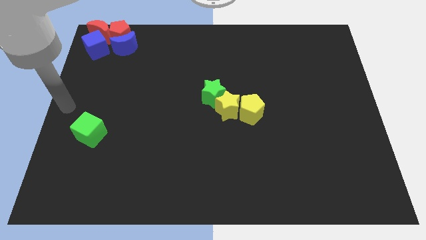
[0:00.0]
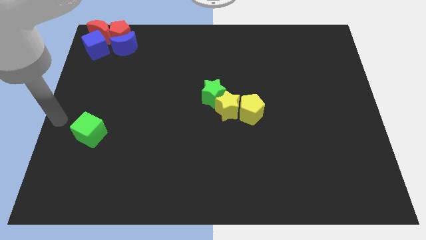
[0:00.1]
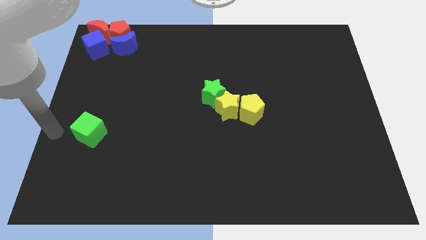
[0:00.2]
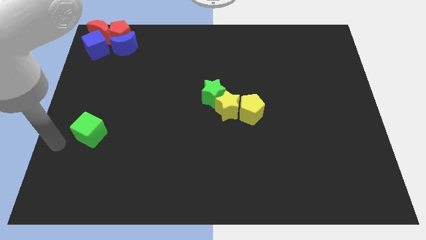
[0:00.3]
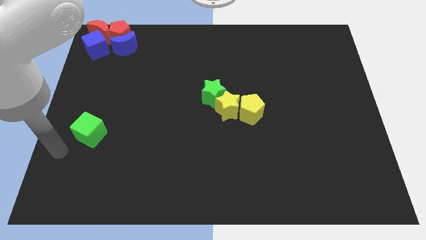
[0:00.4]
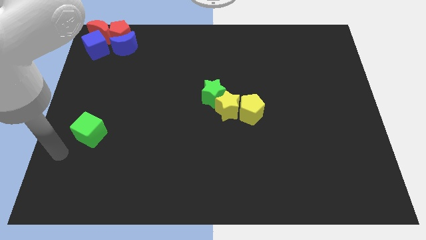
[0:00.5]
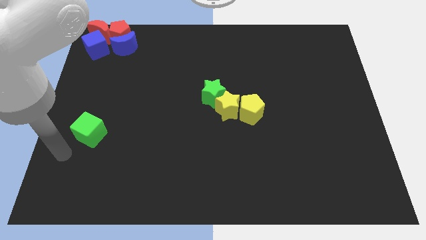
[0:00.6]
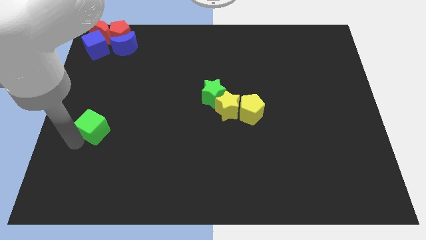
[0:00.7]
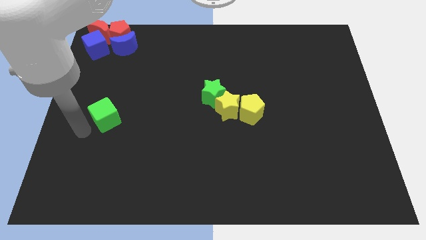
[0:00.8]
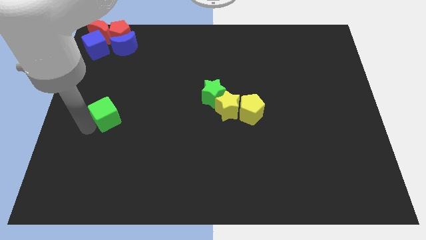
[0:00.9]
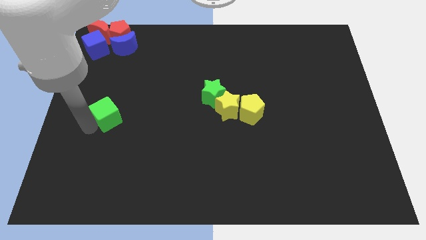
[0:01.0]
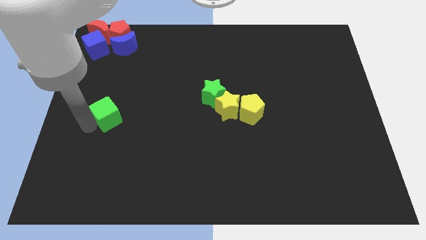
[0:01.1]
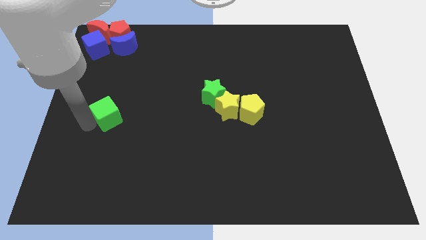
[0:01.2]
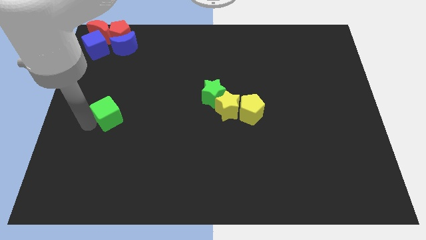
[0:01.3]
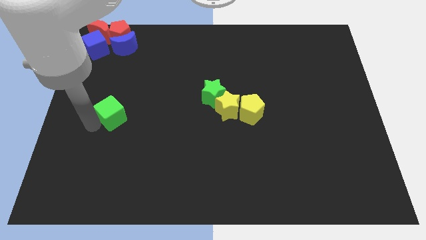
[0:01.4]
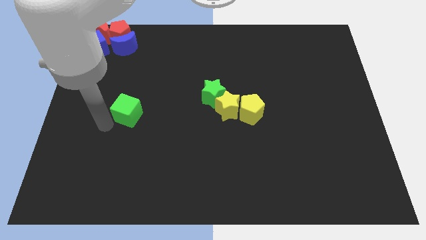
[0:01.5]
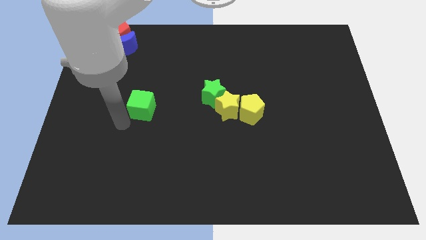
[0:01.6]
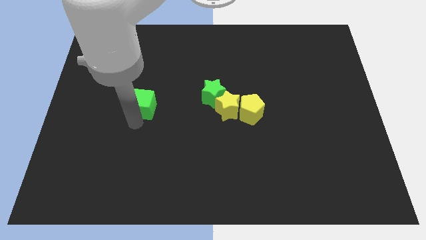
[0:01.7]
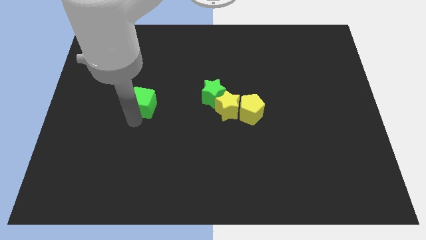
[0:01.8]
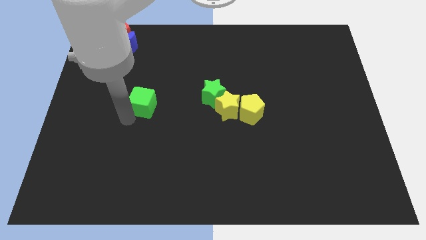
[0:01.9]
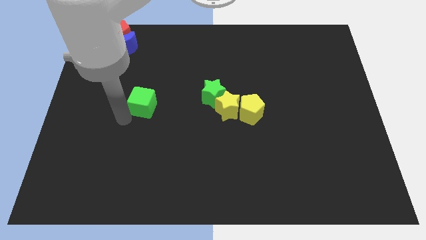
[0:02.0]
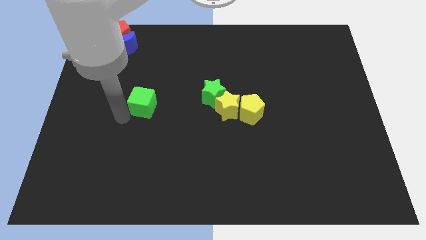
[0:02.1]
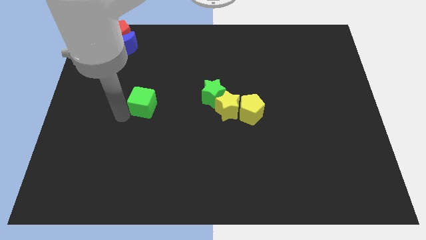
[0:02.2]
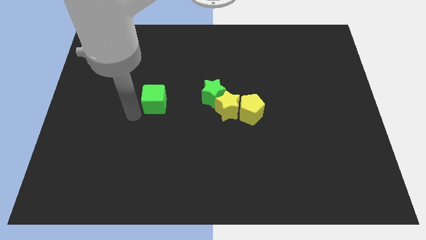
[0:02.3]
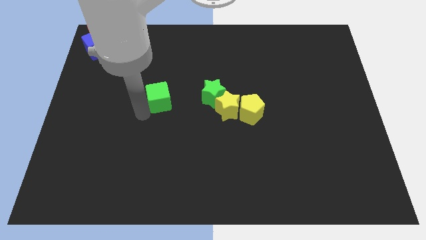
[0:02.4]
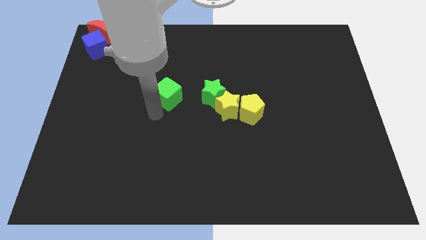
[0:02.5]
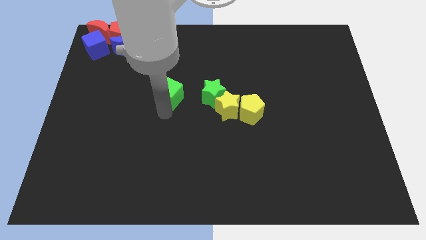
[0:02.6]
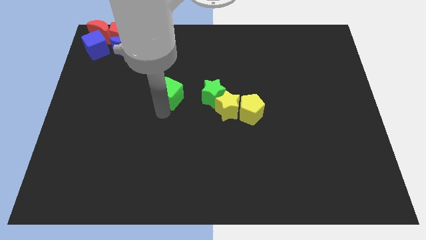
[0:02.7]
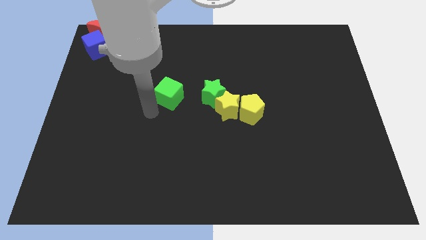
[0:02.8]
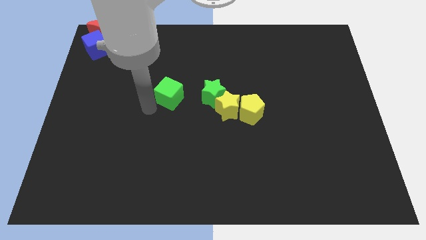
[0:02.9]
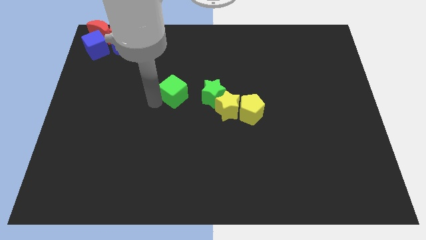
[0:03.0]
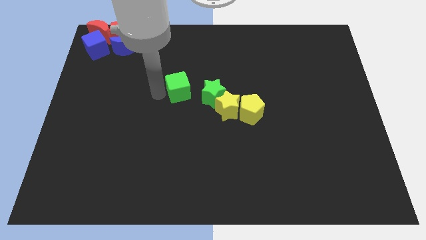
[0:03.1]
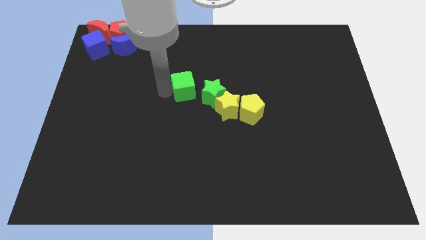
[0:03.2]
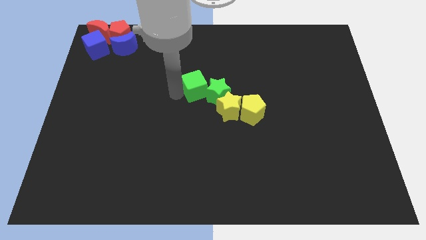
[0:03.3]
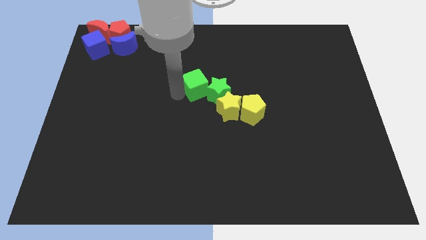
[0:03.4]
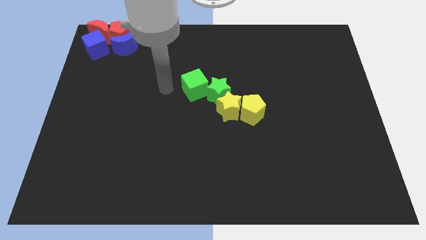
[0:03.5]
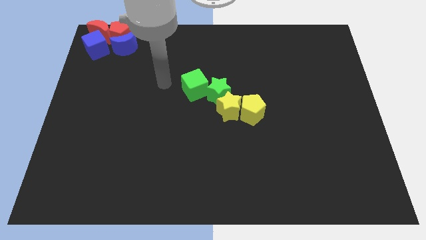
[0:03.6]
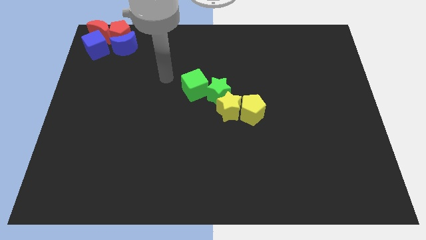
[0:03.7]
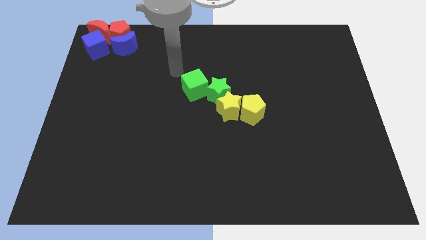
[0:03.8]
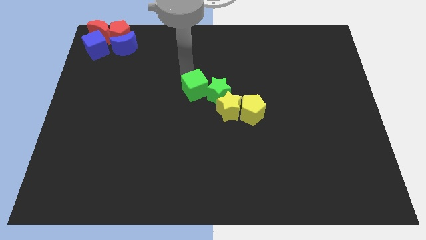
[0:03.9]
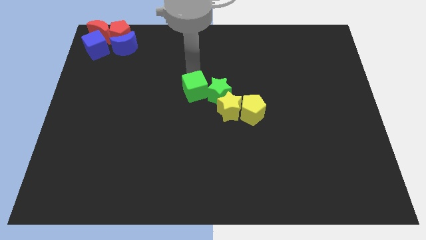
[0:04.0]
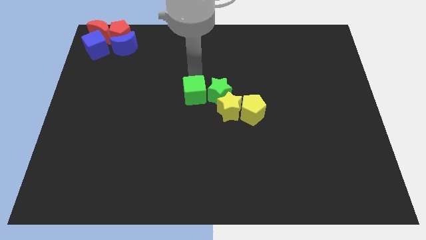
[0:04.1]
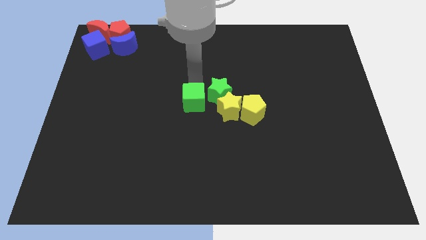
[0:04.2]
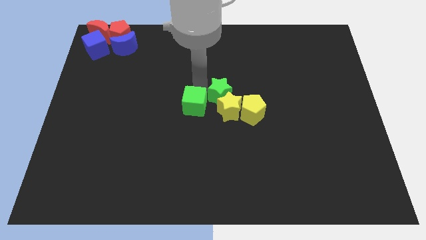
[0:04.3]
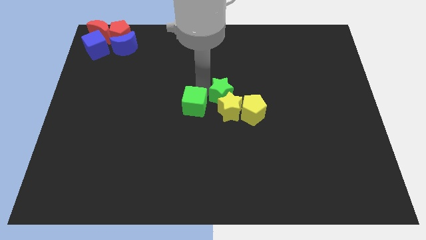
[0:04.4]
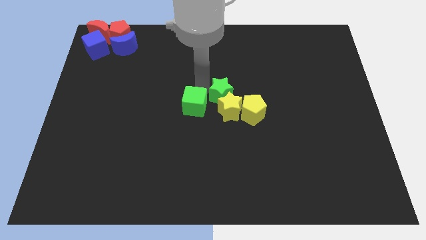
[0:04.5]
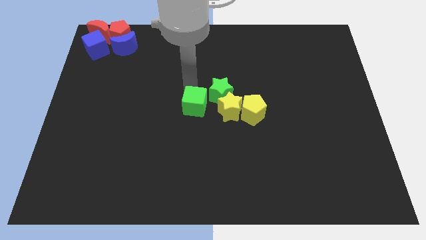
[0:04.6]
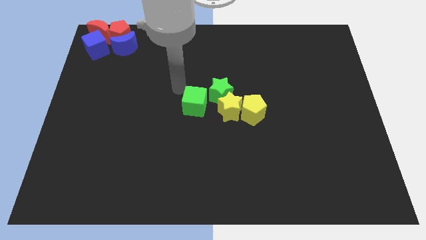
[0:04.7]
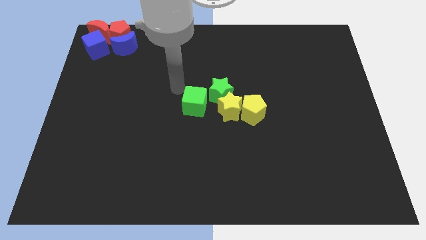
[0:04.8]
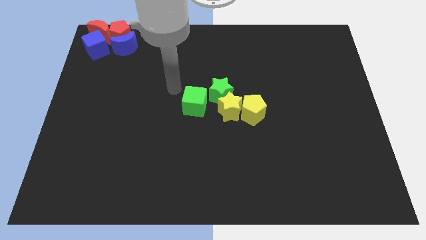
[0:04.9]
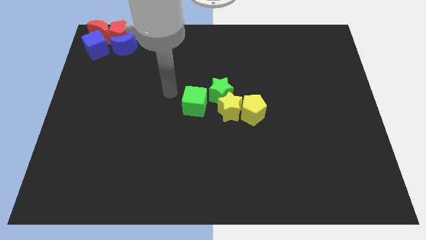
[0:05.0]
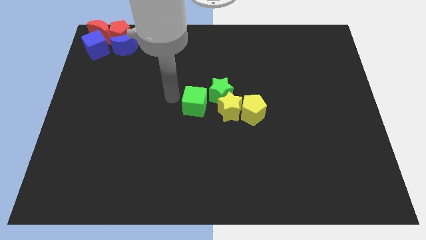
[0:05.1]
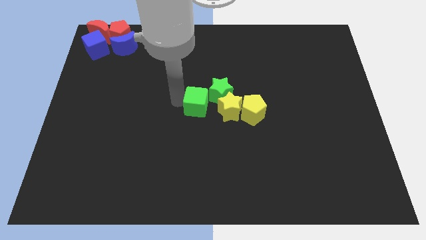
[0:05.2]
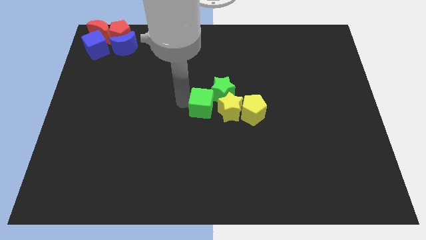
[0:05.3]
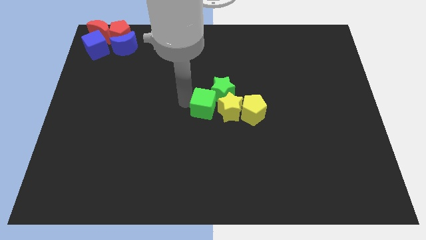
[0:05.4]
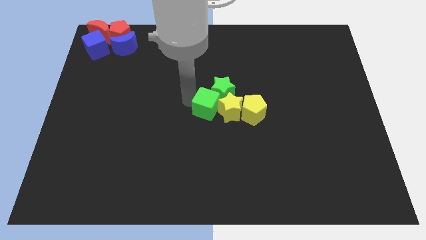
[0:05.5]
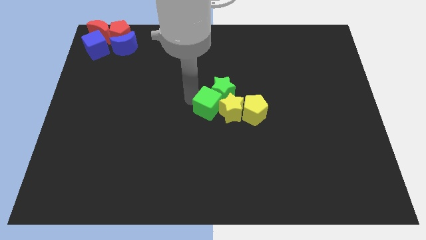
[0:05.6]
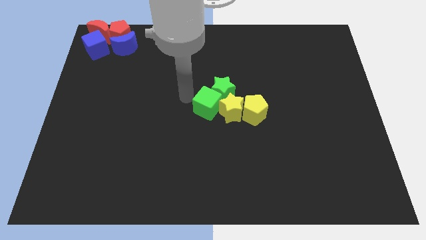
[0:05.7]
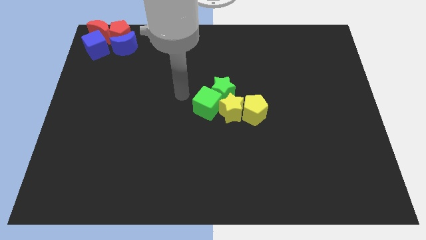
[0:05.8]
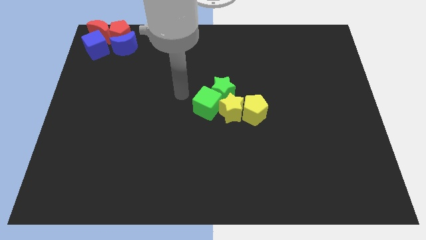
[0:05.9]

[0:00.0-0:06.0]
push the green cube into the green star and the yellow star

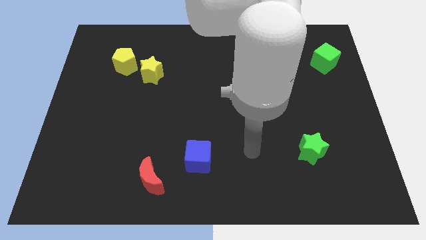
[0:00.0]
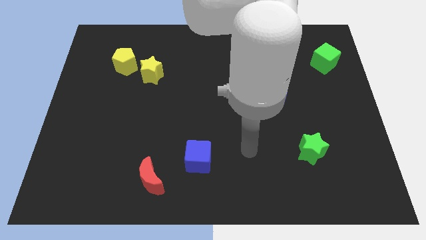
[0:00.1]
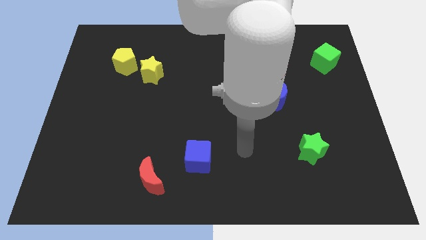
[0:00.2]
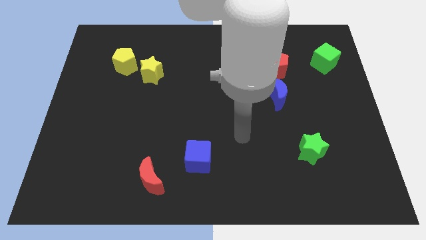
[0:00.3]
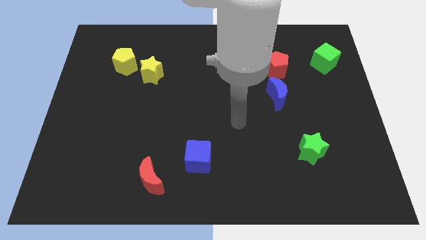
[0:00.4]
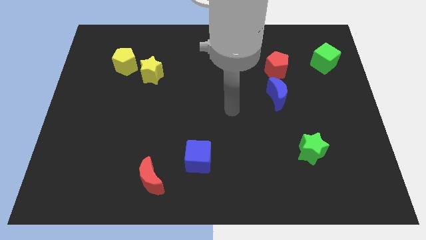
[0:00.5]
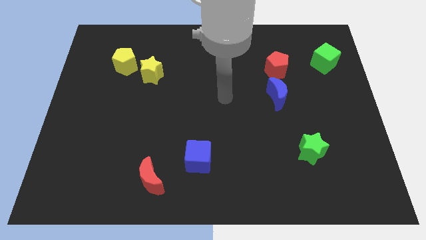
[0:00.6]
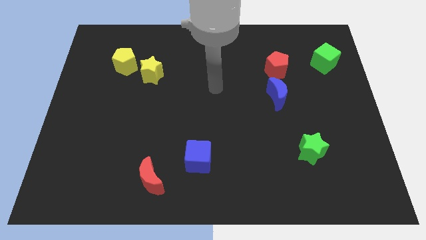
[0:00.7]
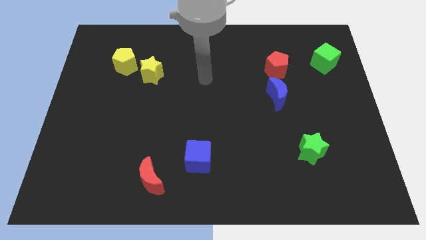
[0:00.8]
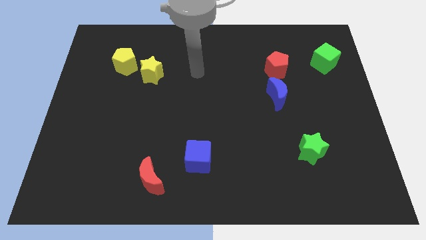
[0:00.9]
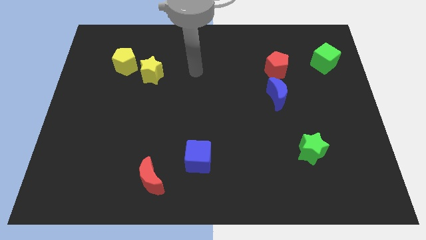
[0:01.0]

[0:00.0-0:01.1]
point the arm to the right of the yellow star

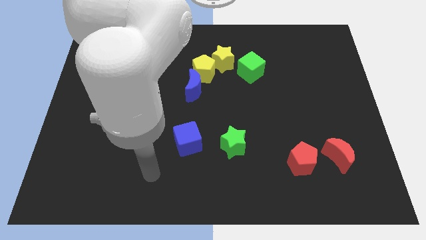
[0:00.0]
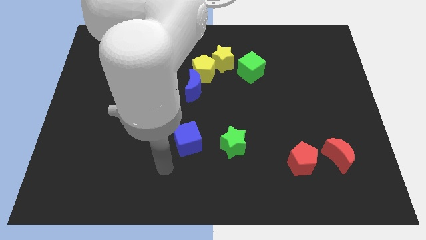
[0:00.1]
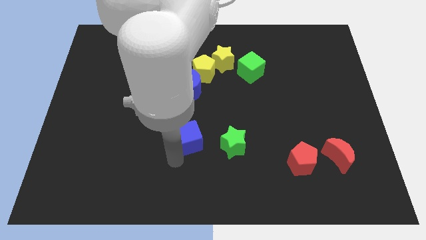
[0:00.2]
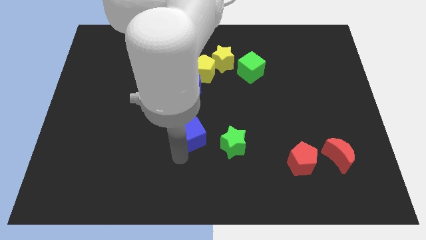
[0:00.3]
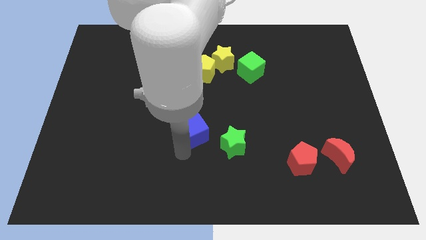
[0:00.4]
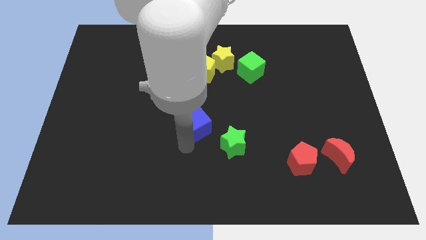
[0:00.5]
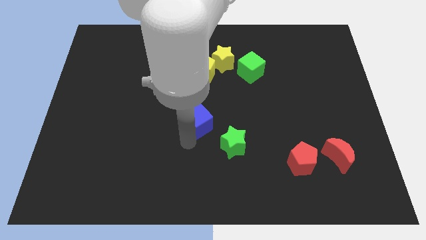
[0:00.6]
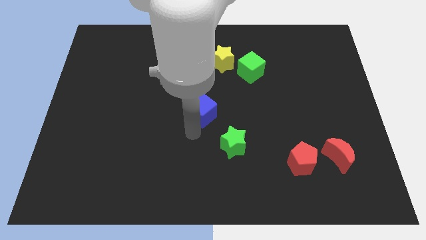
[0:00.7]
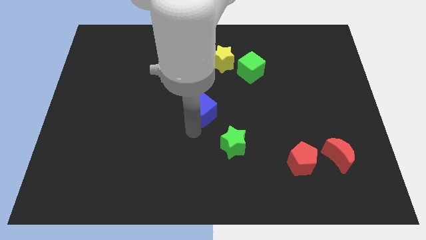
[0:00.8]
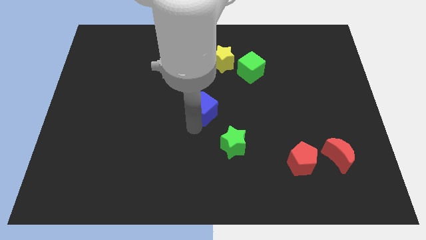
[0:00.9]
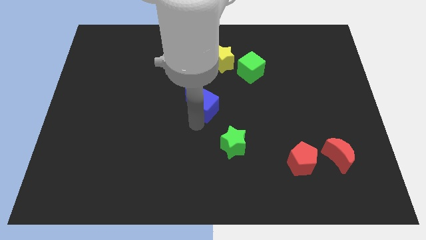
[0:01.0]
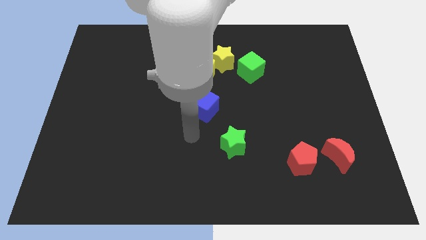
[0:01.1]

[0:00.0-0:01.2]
move the blue cube towards the bottom right of the blue crescent

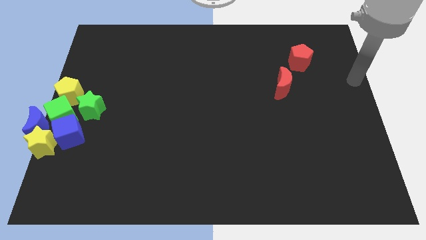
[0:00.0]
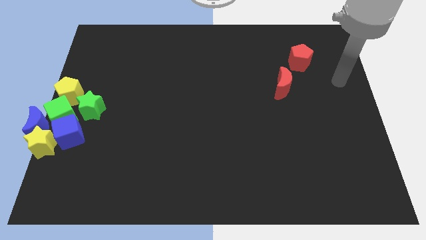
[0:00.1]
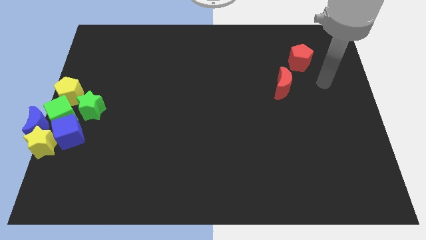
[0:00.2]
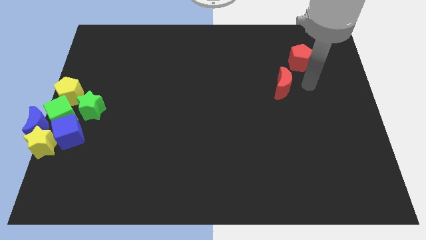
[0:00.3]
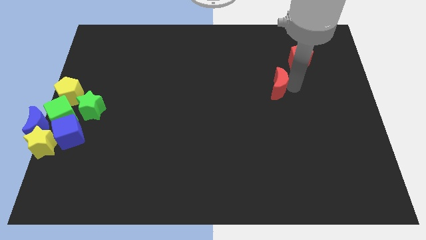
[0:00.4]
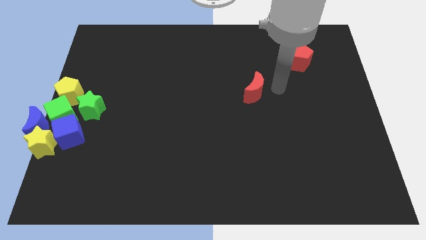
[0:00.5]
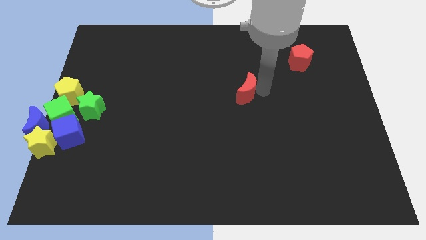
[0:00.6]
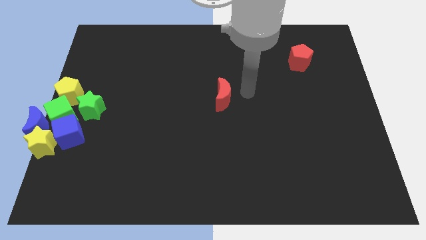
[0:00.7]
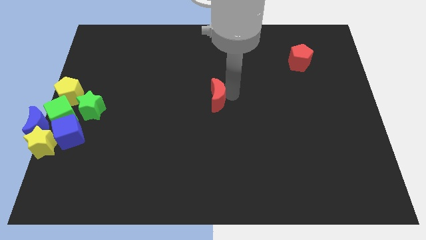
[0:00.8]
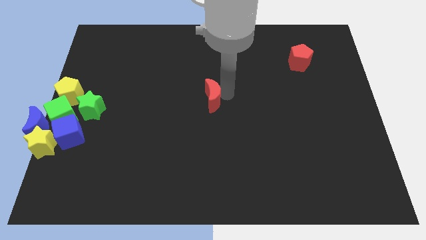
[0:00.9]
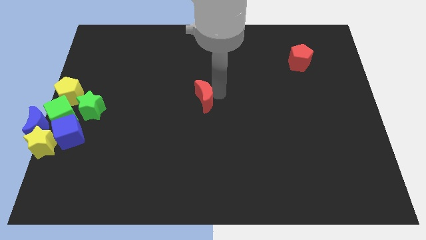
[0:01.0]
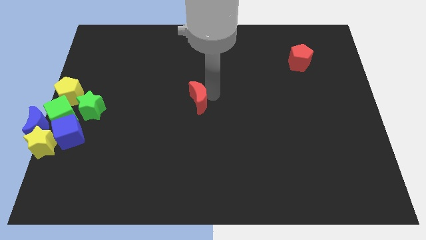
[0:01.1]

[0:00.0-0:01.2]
move the red crescent away from the red pentagon
